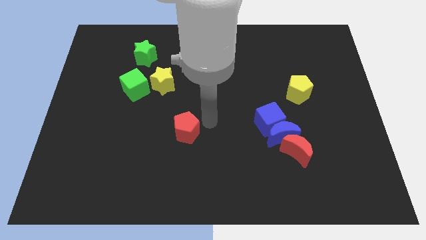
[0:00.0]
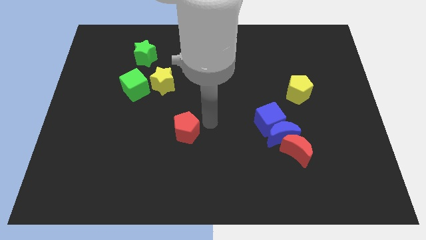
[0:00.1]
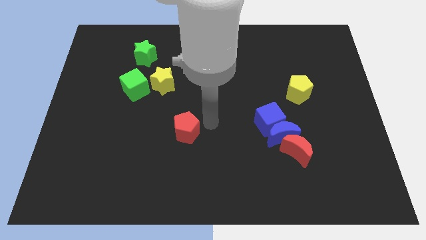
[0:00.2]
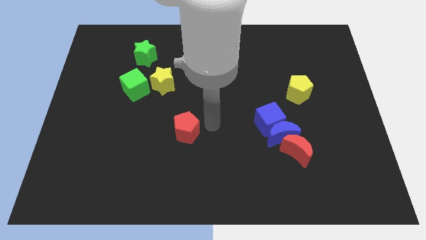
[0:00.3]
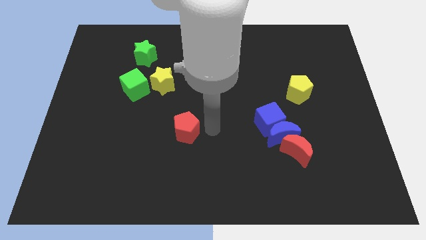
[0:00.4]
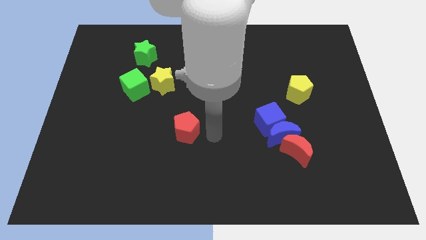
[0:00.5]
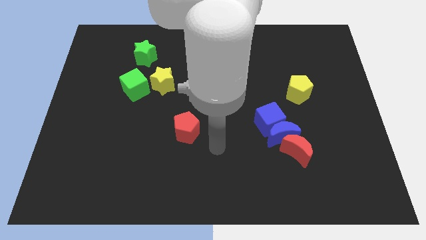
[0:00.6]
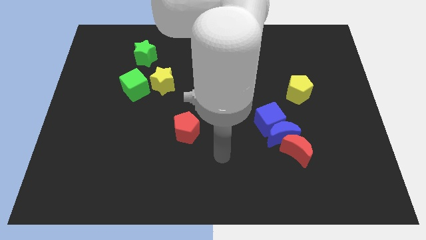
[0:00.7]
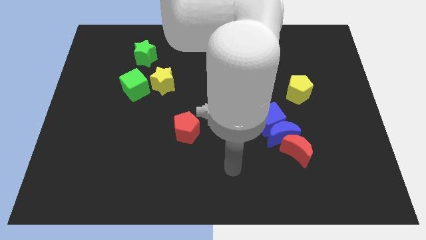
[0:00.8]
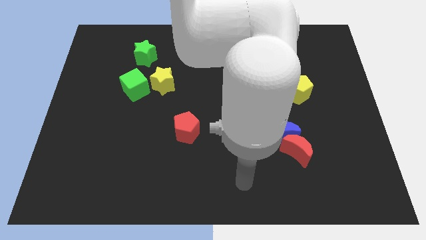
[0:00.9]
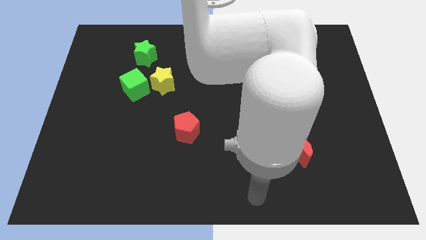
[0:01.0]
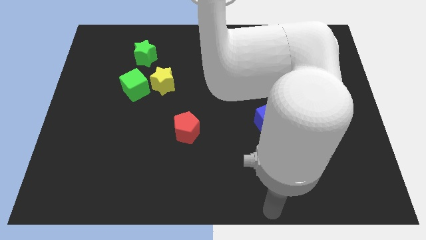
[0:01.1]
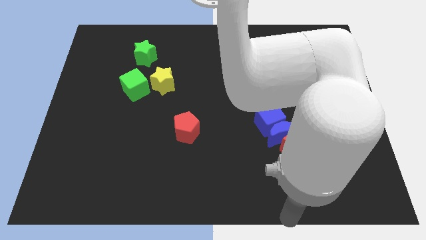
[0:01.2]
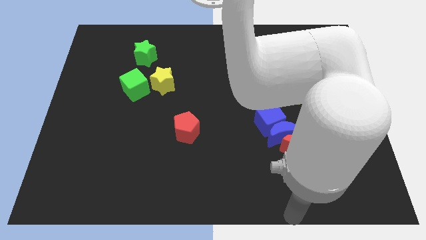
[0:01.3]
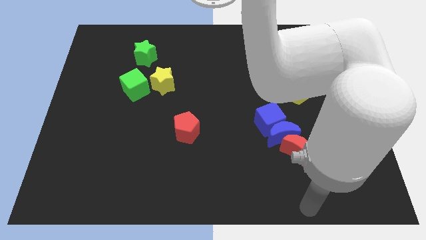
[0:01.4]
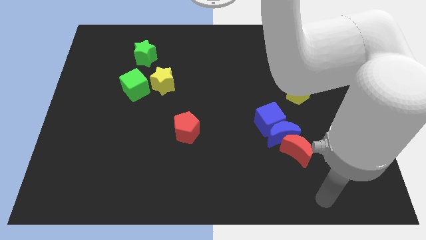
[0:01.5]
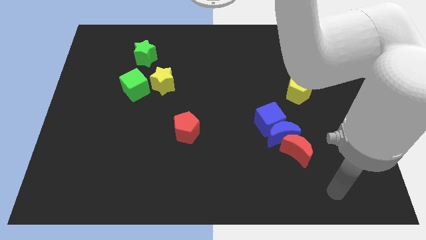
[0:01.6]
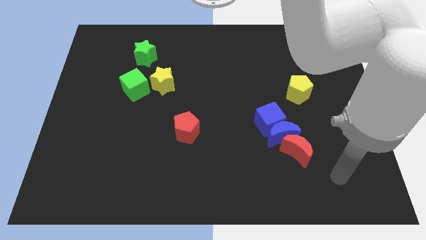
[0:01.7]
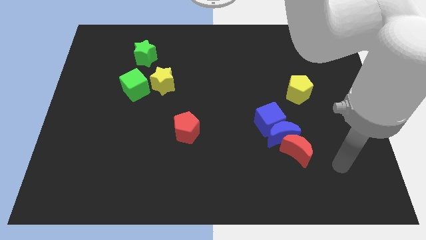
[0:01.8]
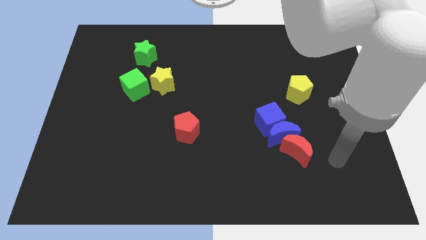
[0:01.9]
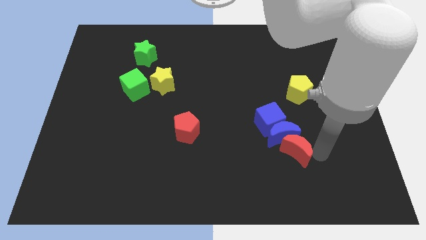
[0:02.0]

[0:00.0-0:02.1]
move your arm to the right of the red crescent

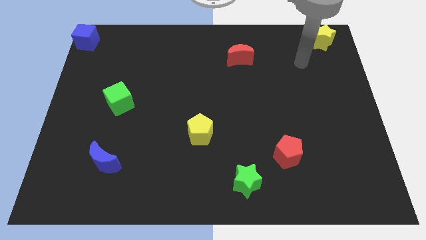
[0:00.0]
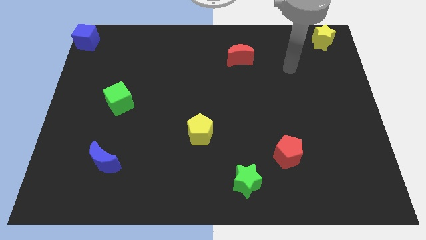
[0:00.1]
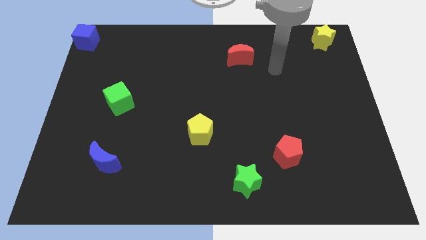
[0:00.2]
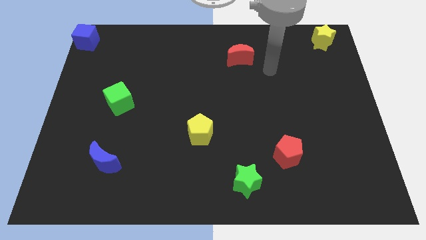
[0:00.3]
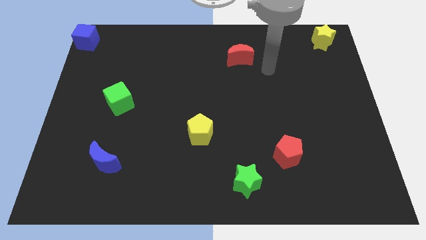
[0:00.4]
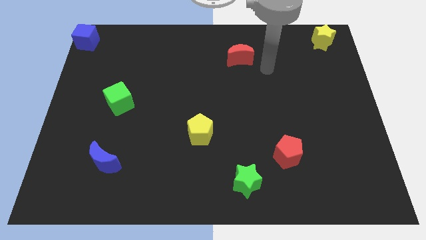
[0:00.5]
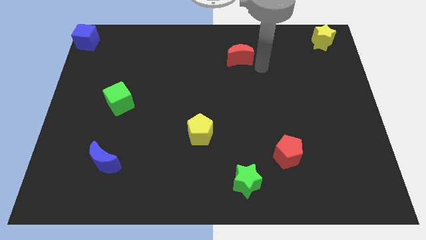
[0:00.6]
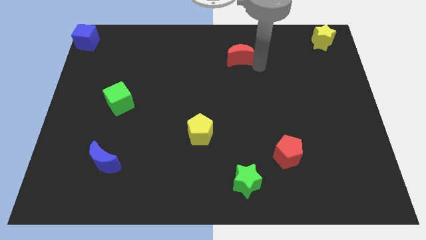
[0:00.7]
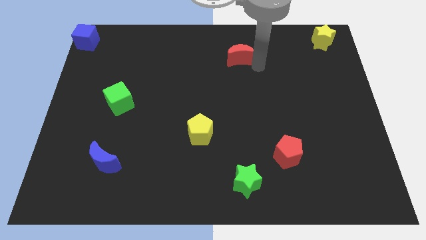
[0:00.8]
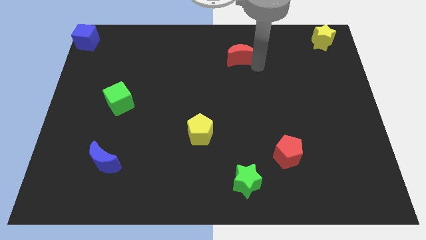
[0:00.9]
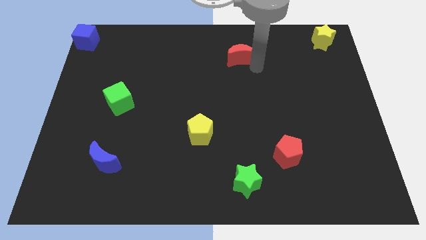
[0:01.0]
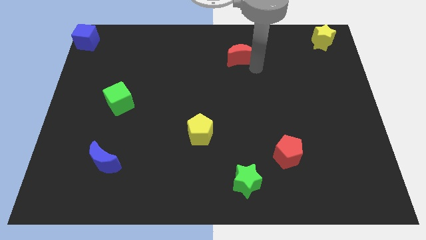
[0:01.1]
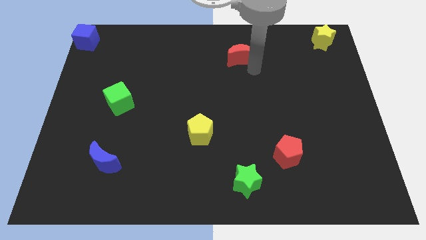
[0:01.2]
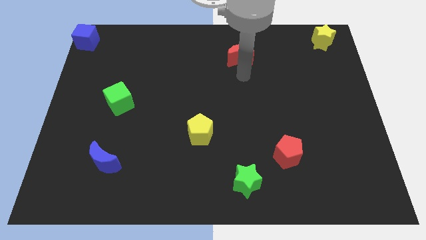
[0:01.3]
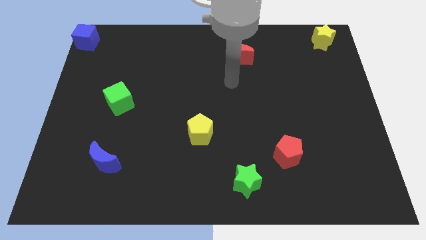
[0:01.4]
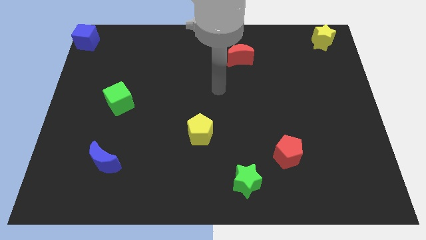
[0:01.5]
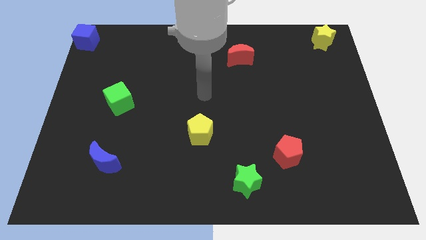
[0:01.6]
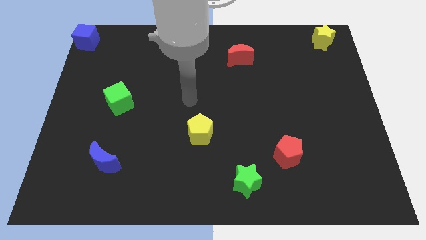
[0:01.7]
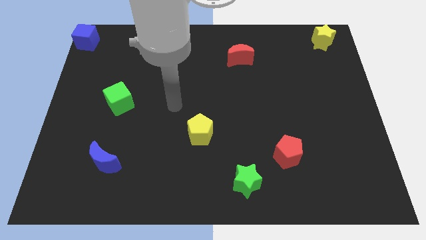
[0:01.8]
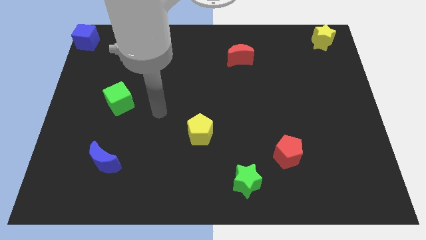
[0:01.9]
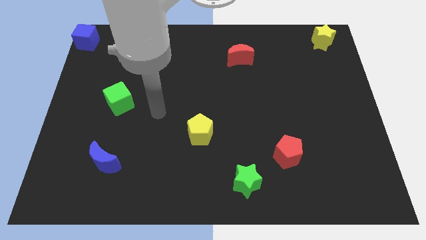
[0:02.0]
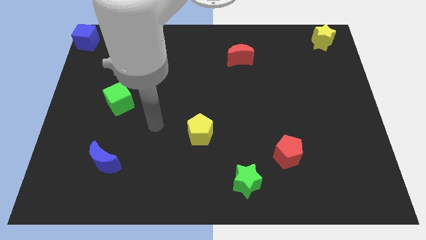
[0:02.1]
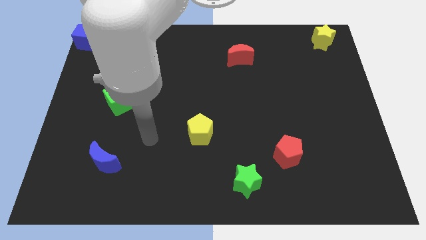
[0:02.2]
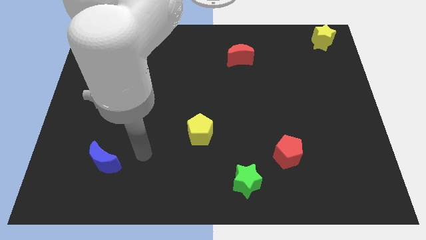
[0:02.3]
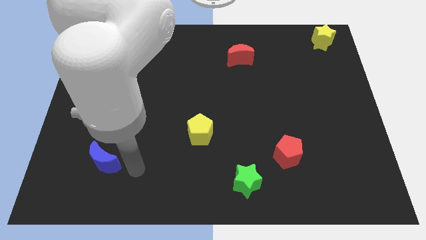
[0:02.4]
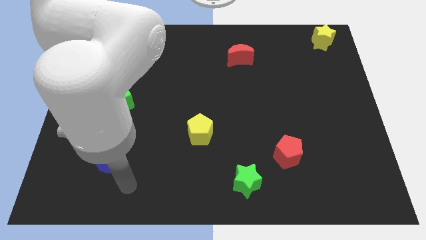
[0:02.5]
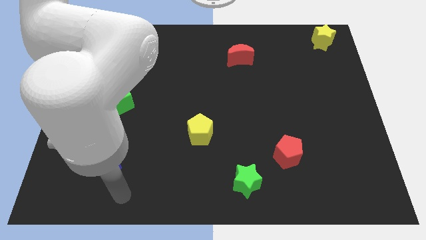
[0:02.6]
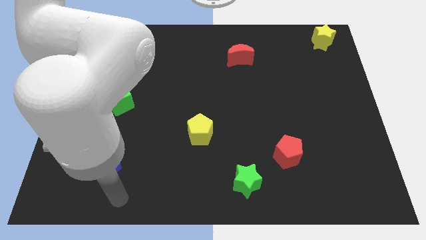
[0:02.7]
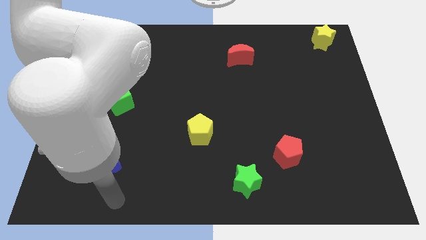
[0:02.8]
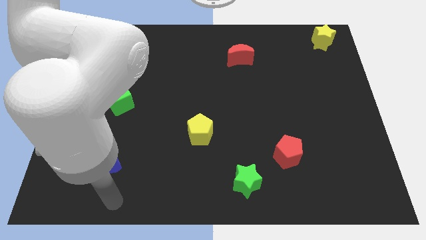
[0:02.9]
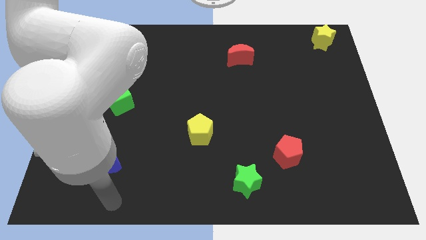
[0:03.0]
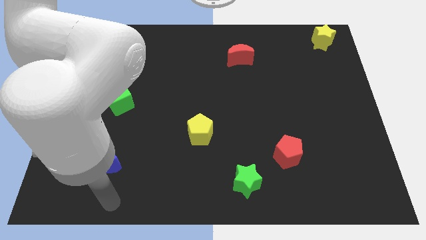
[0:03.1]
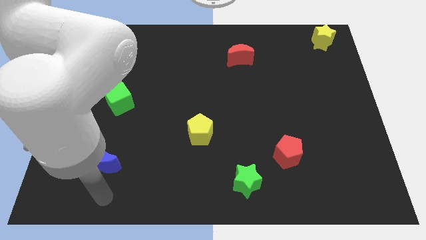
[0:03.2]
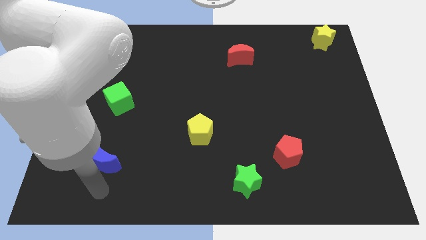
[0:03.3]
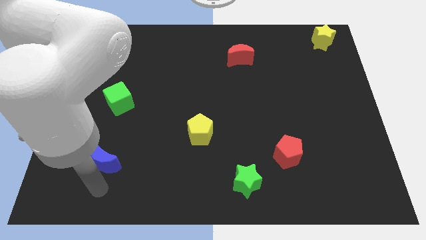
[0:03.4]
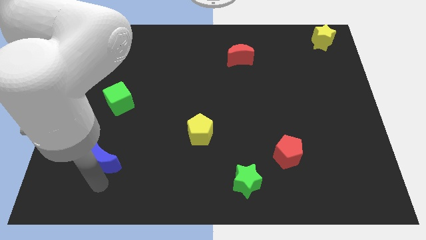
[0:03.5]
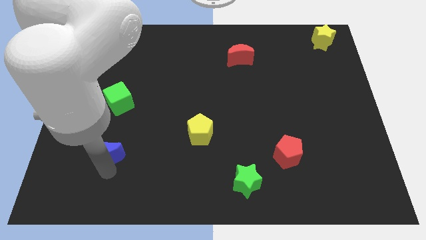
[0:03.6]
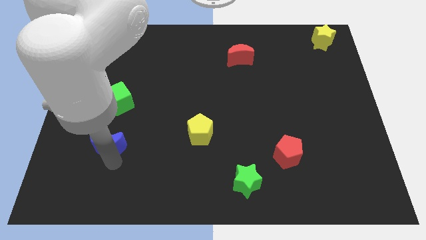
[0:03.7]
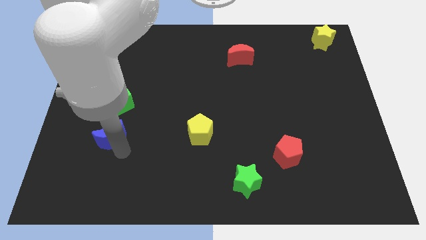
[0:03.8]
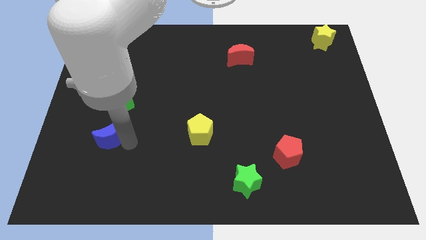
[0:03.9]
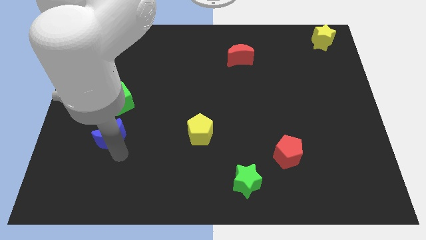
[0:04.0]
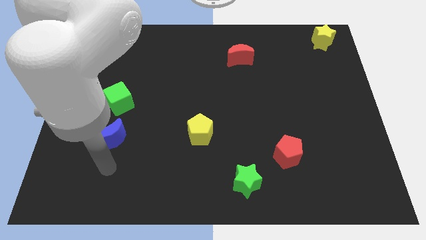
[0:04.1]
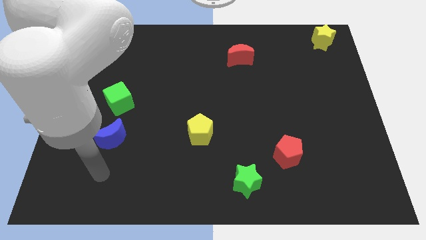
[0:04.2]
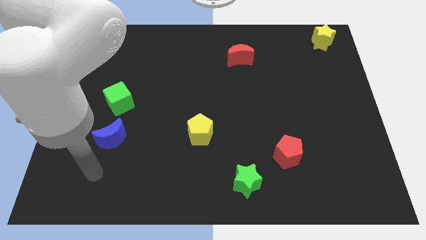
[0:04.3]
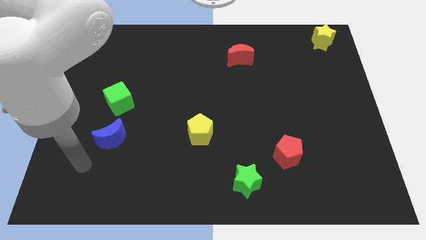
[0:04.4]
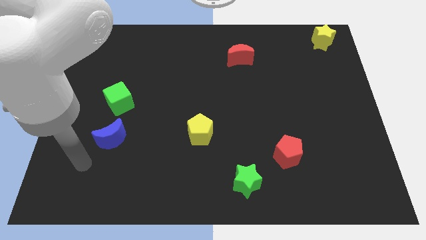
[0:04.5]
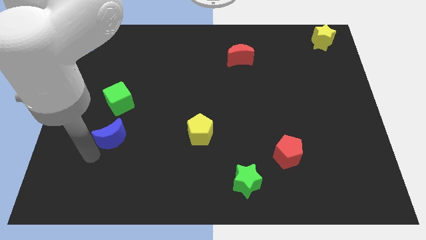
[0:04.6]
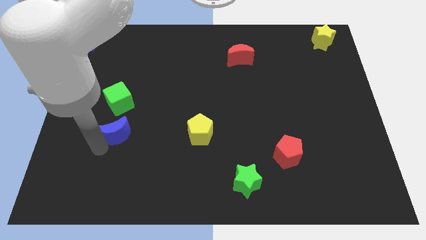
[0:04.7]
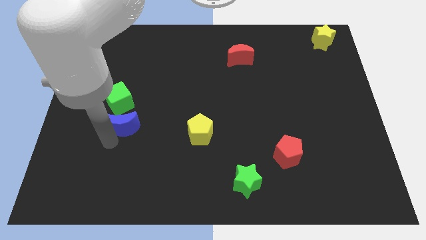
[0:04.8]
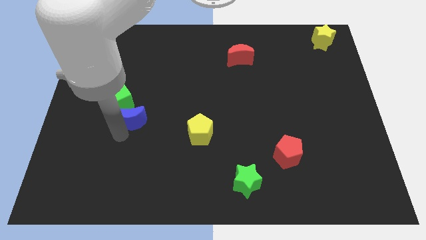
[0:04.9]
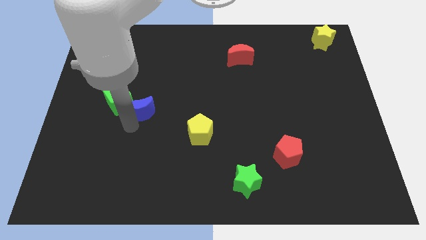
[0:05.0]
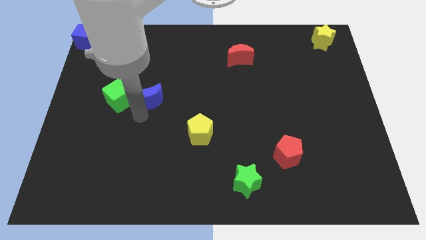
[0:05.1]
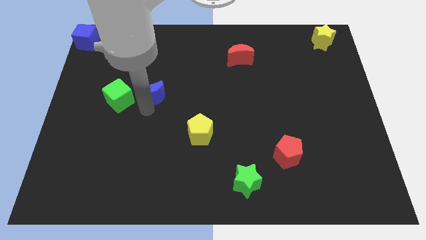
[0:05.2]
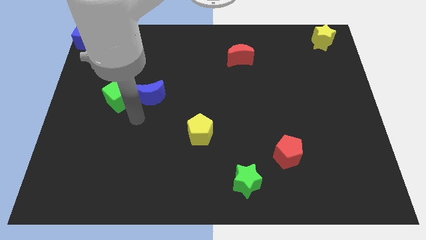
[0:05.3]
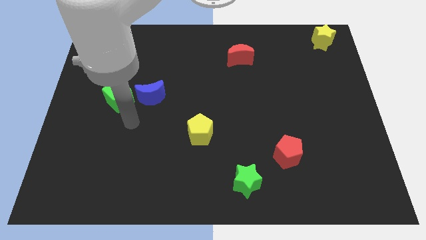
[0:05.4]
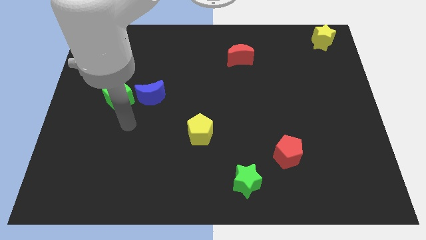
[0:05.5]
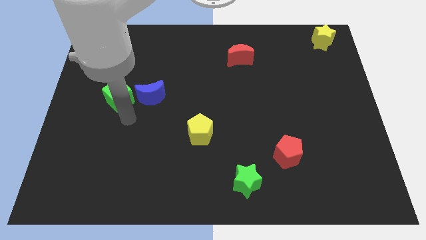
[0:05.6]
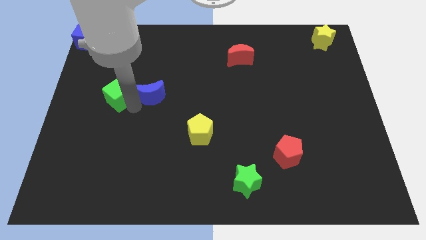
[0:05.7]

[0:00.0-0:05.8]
place the blue crescent to the right of the green cube

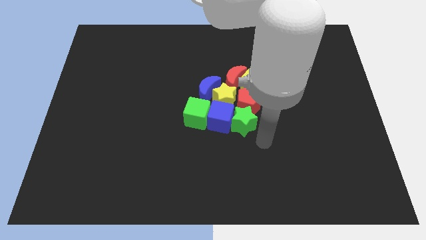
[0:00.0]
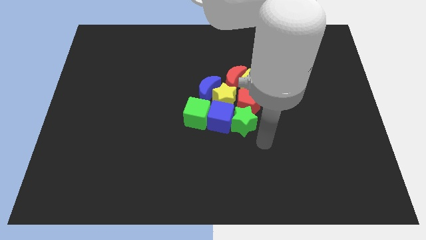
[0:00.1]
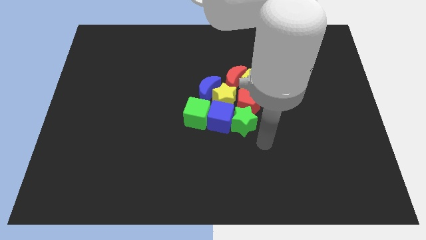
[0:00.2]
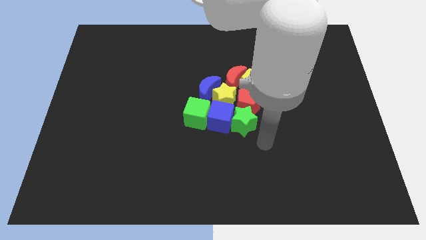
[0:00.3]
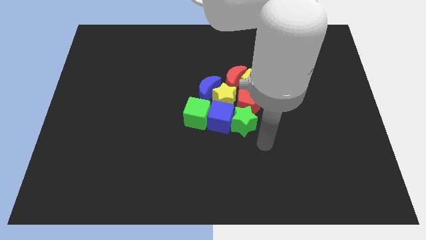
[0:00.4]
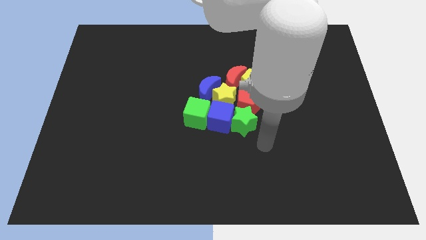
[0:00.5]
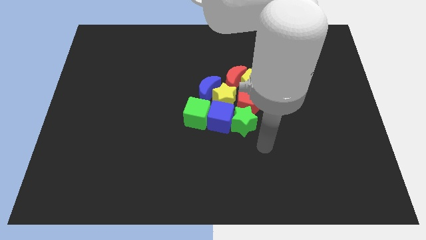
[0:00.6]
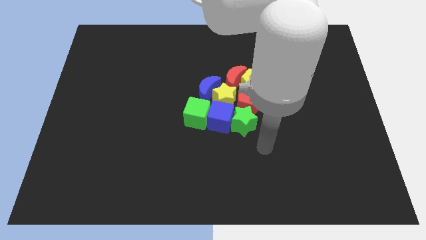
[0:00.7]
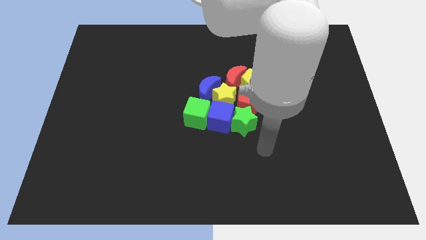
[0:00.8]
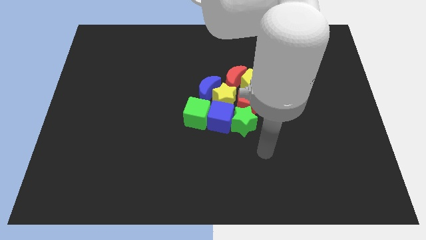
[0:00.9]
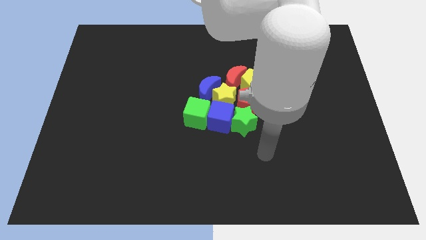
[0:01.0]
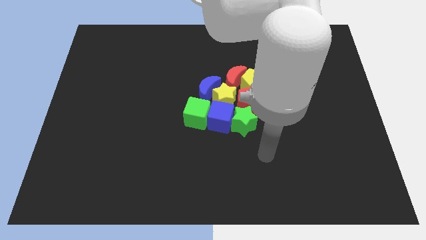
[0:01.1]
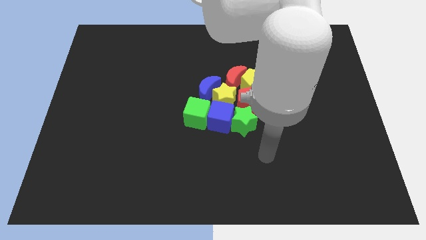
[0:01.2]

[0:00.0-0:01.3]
move your arm to the bottom of the board

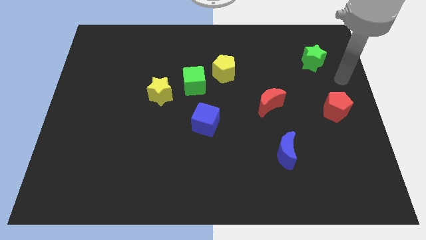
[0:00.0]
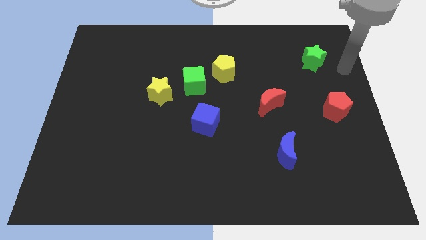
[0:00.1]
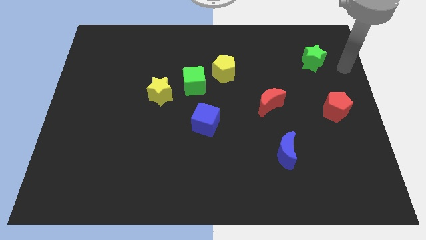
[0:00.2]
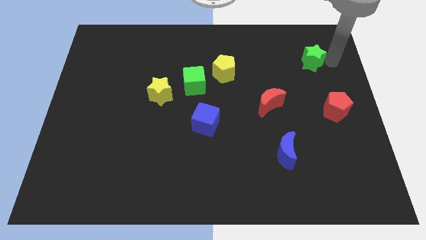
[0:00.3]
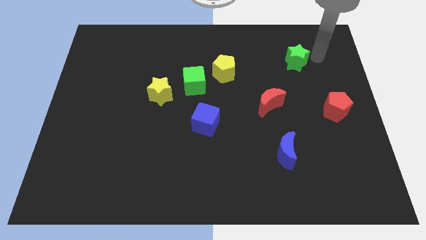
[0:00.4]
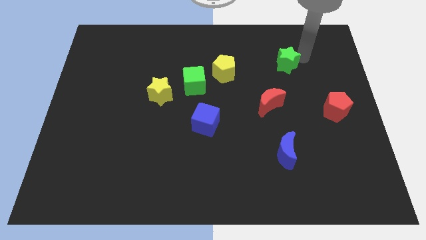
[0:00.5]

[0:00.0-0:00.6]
place the green star above the red crescent
